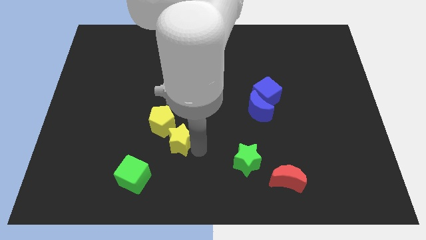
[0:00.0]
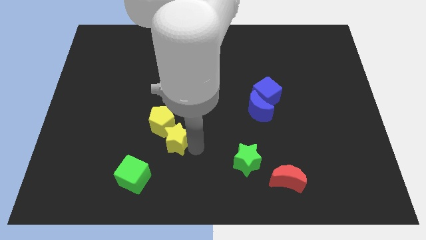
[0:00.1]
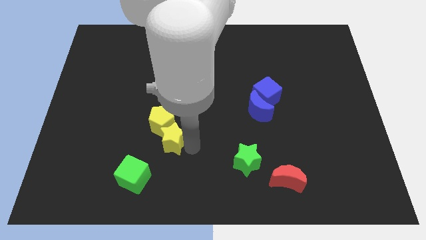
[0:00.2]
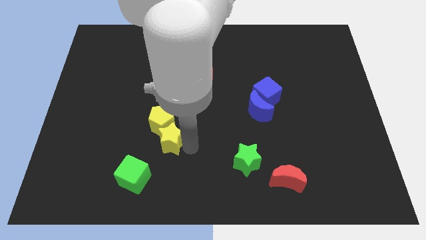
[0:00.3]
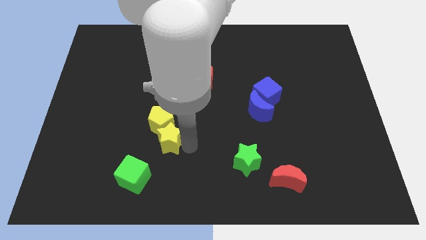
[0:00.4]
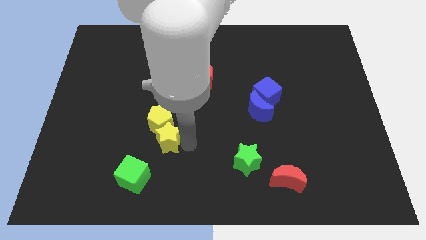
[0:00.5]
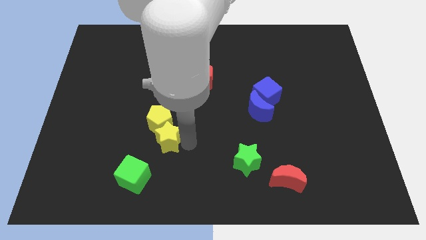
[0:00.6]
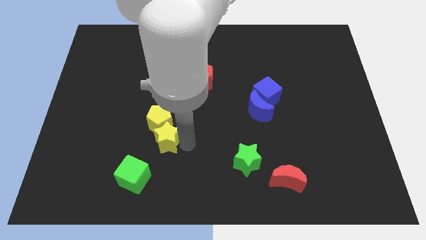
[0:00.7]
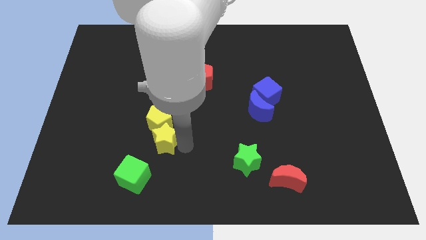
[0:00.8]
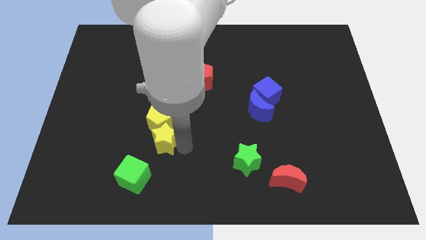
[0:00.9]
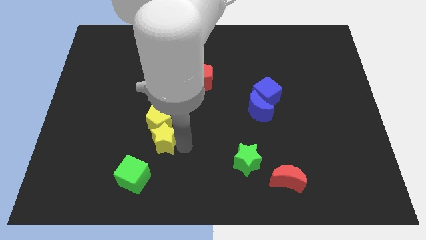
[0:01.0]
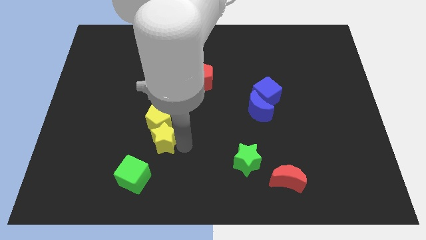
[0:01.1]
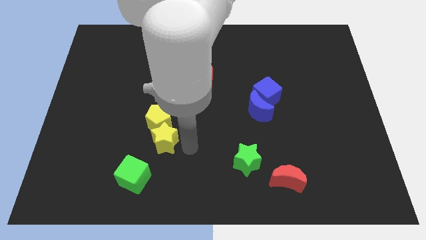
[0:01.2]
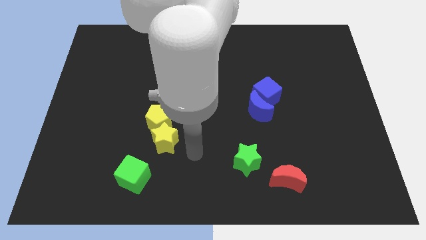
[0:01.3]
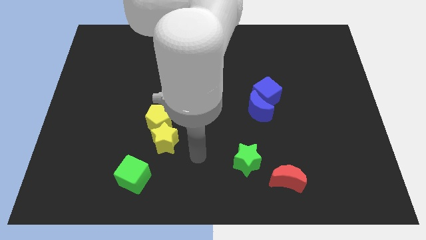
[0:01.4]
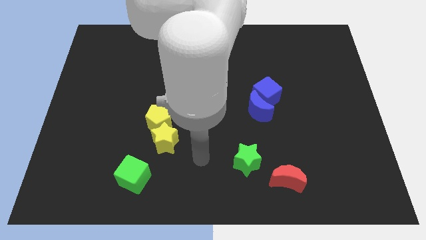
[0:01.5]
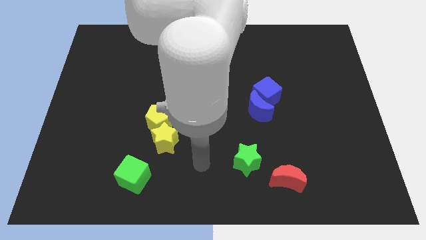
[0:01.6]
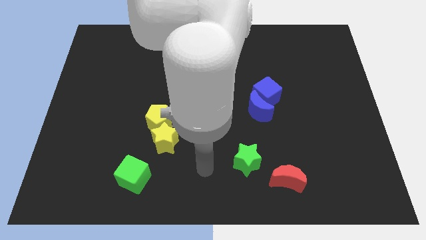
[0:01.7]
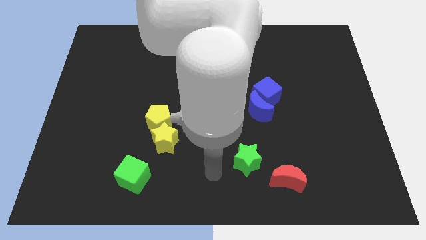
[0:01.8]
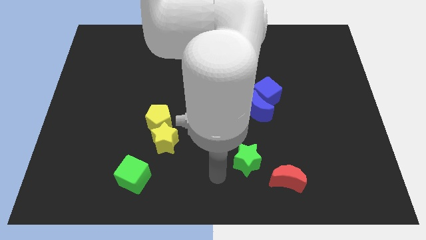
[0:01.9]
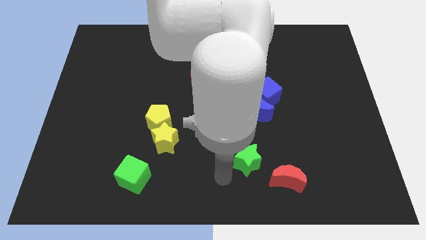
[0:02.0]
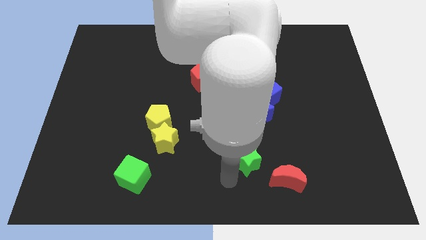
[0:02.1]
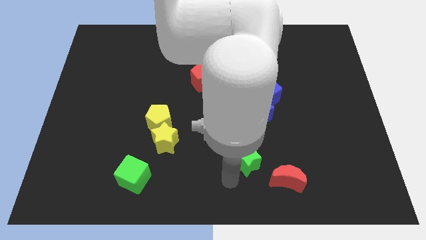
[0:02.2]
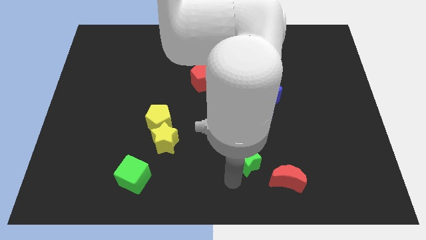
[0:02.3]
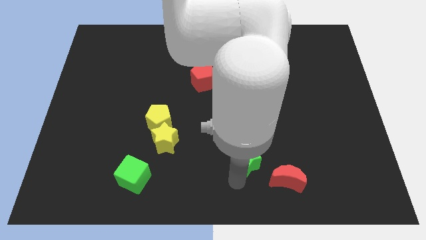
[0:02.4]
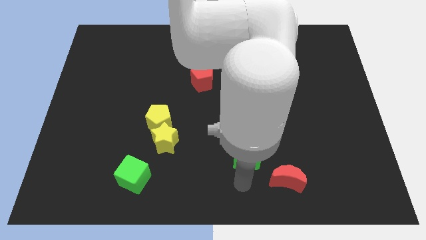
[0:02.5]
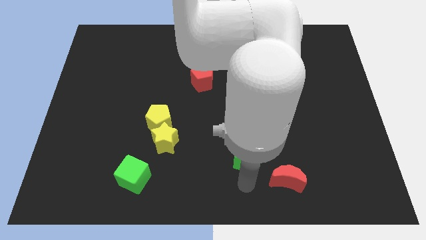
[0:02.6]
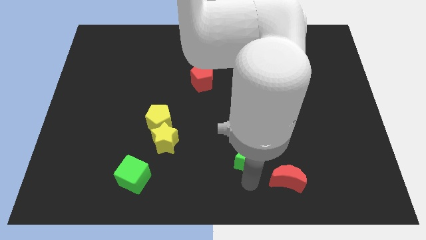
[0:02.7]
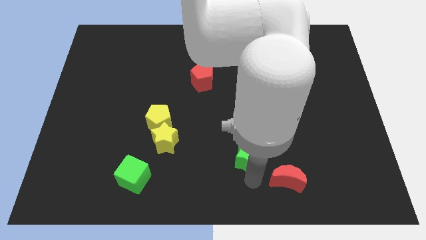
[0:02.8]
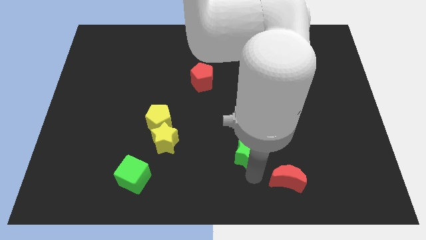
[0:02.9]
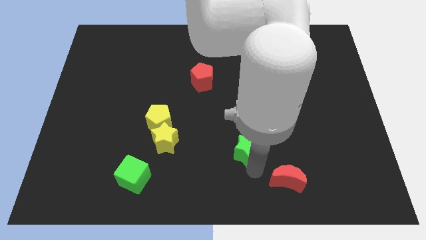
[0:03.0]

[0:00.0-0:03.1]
touch the green star

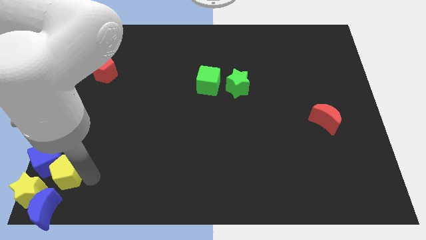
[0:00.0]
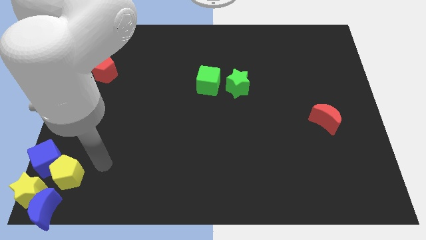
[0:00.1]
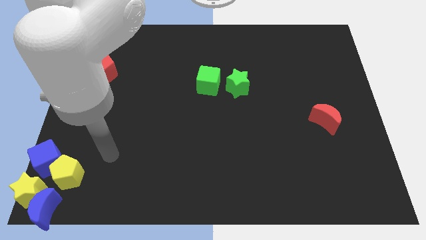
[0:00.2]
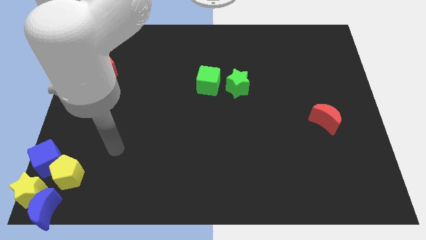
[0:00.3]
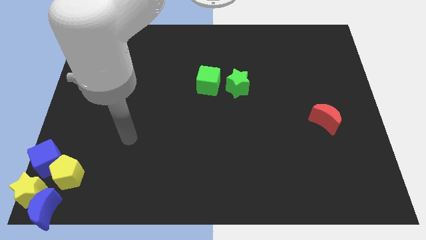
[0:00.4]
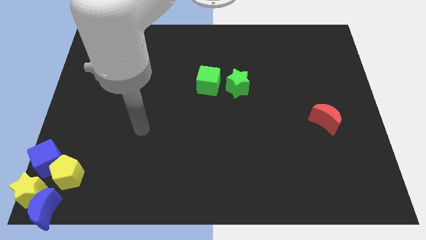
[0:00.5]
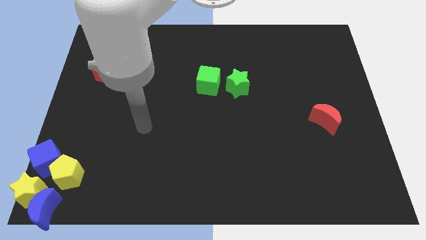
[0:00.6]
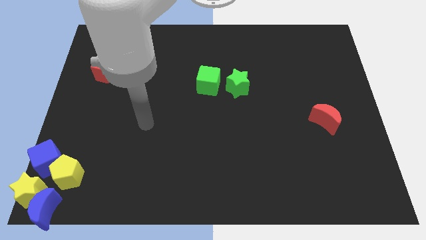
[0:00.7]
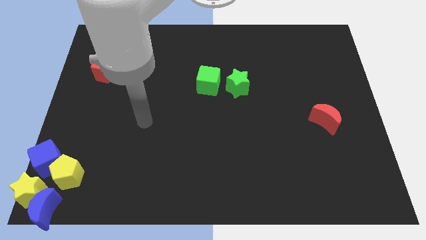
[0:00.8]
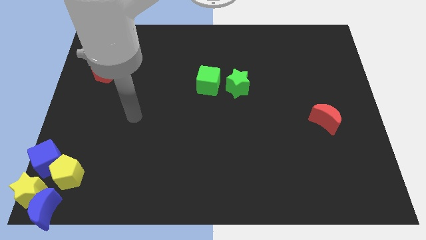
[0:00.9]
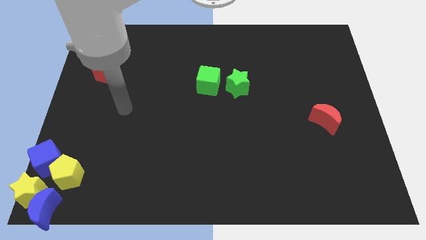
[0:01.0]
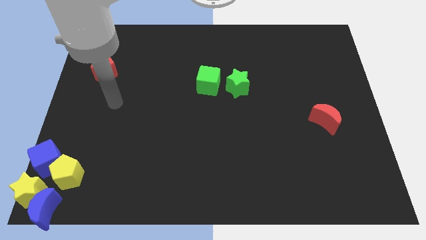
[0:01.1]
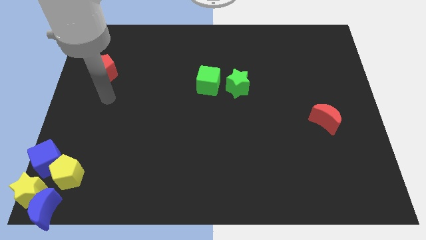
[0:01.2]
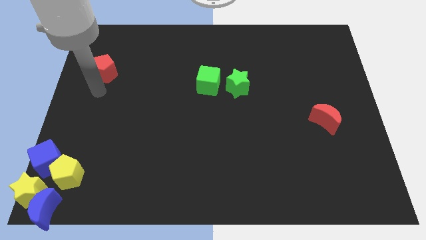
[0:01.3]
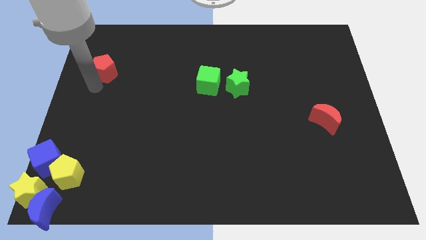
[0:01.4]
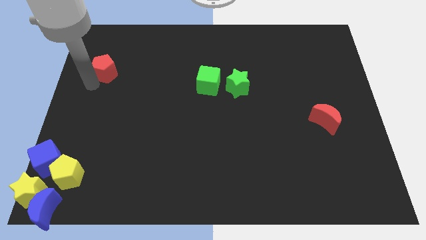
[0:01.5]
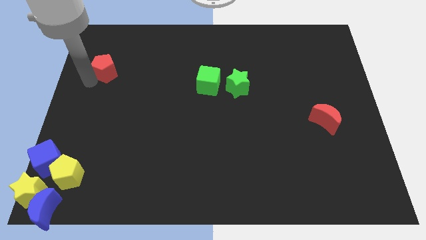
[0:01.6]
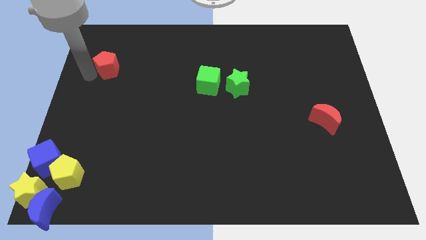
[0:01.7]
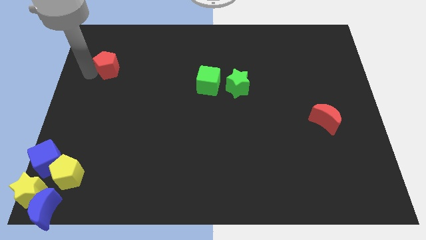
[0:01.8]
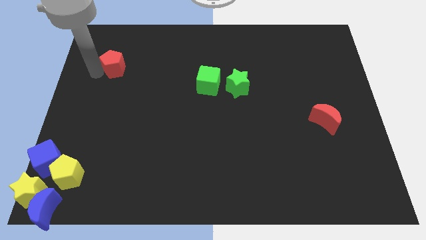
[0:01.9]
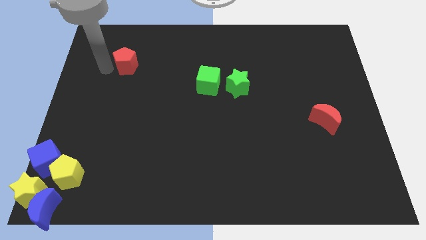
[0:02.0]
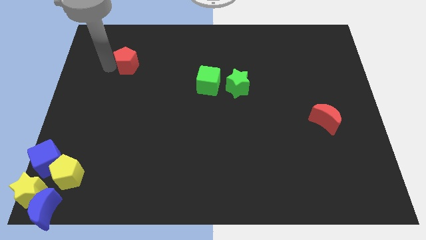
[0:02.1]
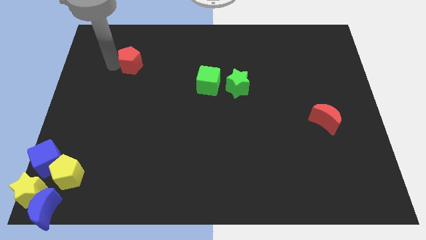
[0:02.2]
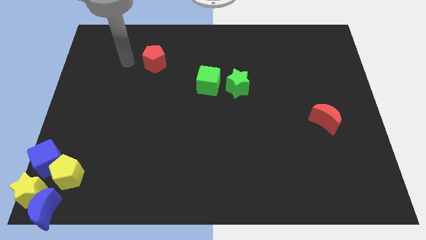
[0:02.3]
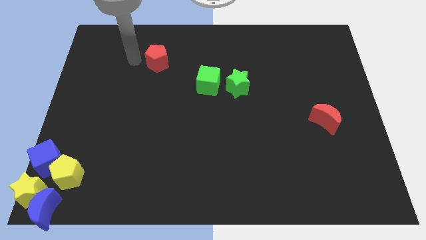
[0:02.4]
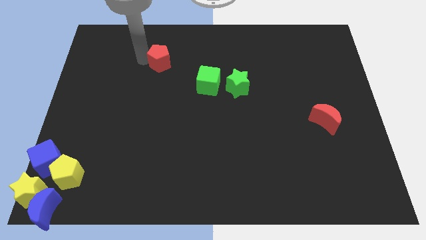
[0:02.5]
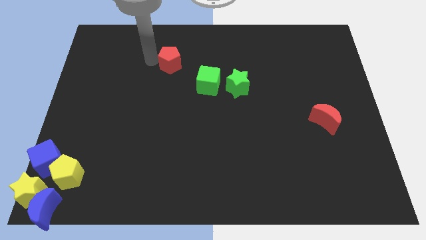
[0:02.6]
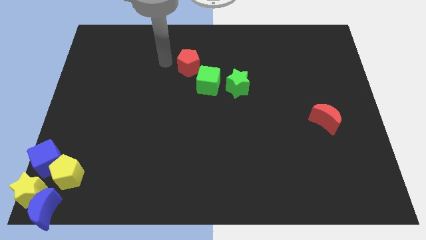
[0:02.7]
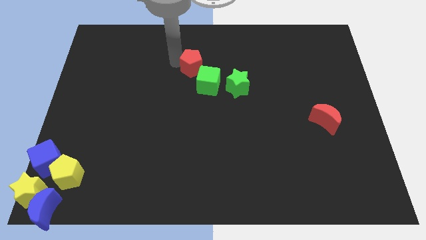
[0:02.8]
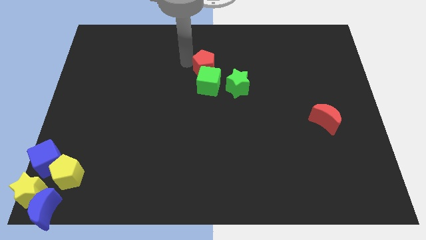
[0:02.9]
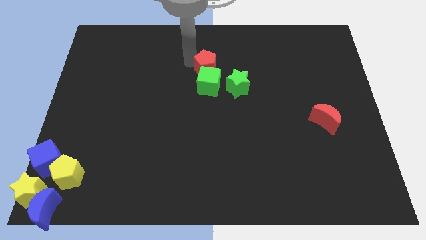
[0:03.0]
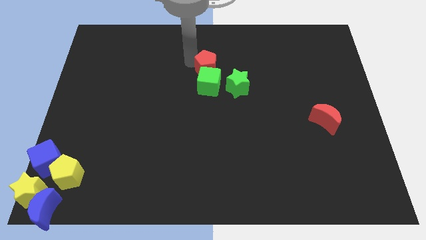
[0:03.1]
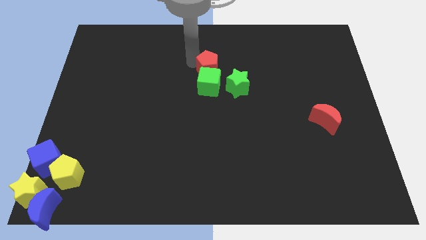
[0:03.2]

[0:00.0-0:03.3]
move the red pentagon to the top of the green cube

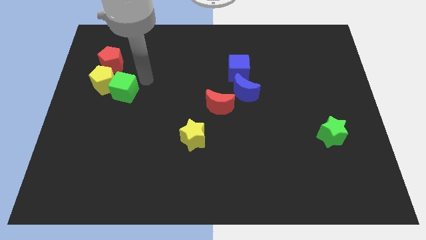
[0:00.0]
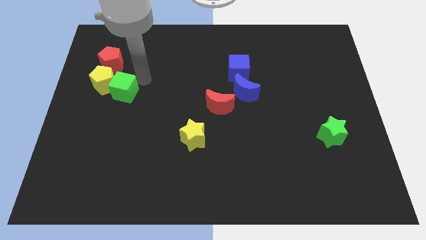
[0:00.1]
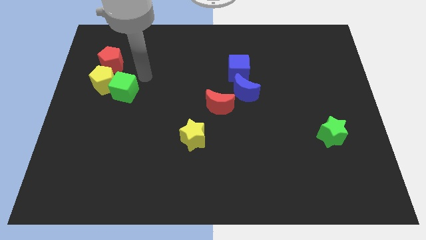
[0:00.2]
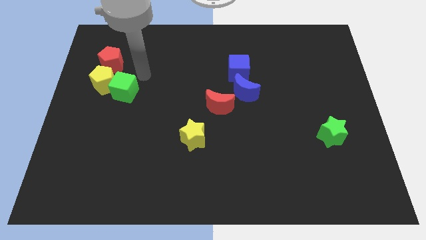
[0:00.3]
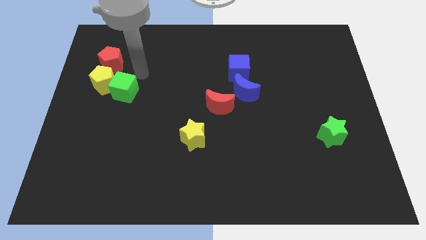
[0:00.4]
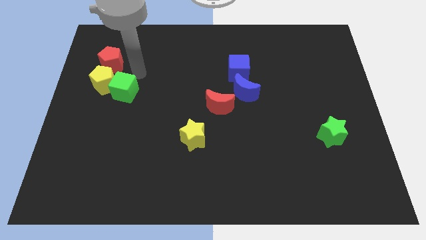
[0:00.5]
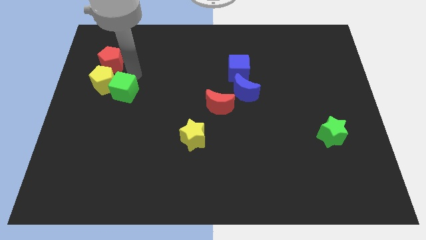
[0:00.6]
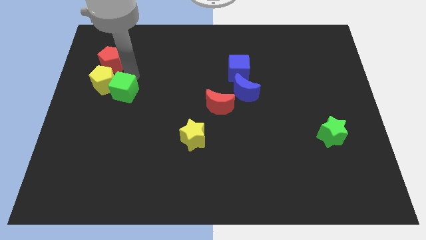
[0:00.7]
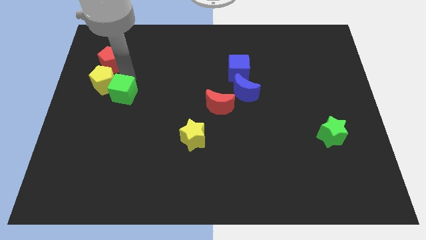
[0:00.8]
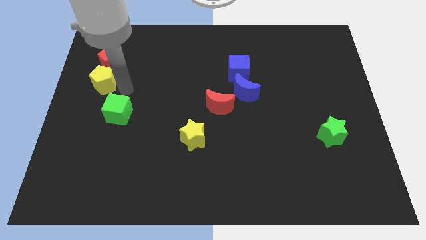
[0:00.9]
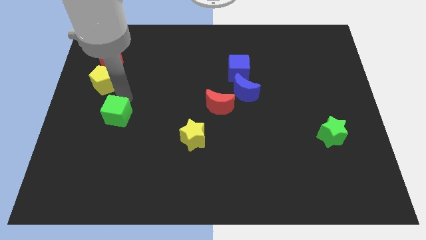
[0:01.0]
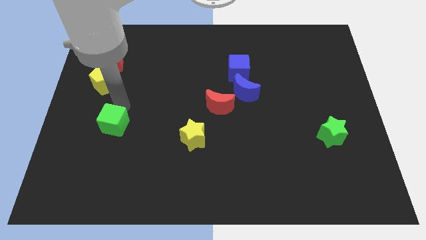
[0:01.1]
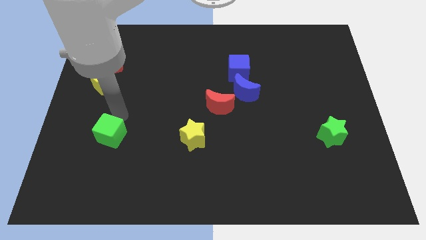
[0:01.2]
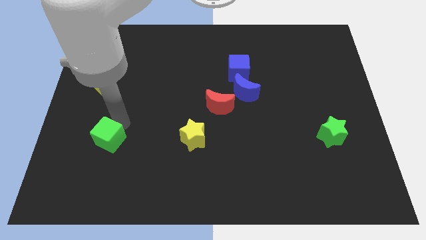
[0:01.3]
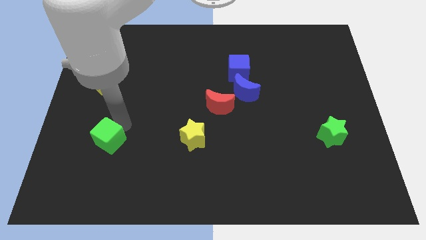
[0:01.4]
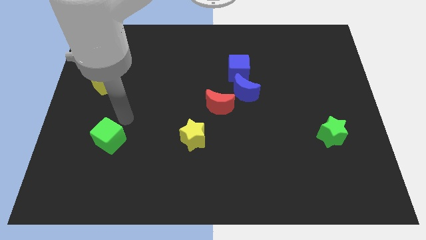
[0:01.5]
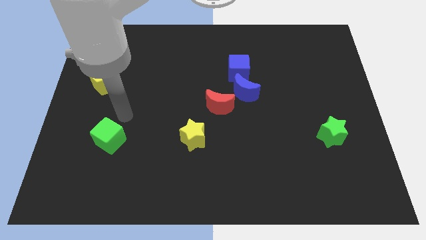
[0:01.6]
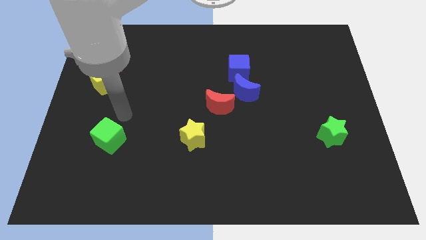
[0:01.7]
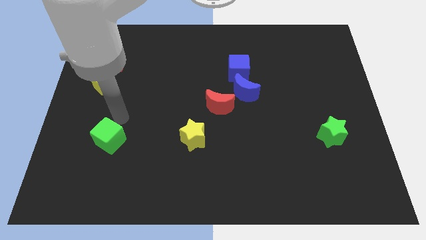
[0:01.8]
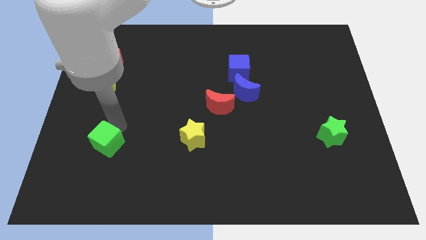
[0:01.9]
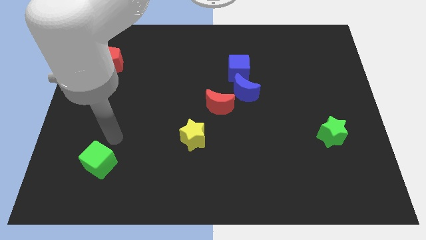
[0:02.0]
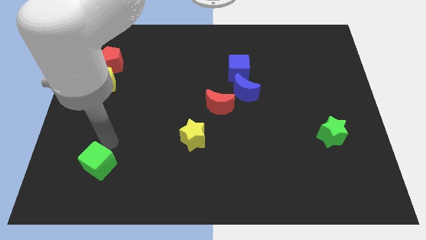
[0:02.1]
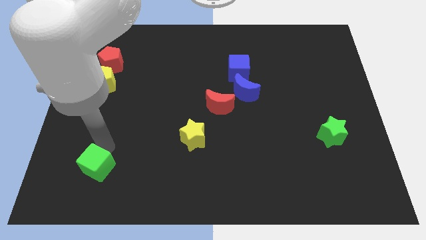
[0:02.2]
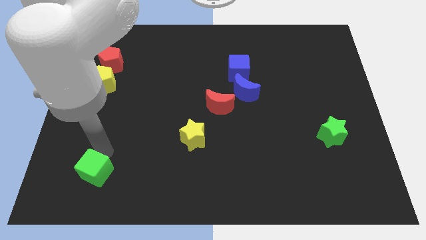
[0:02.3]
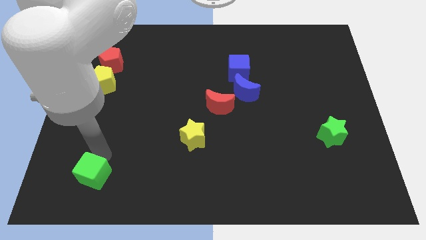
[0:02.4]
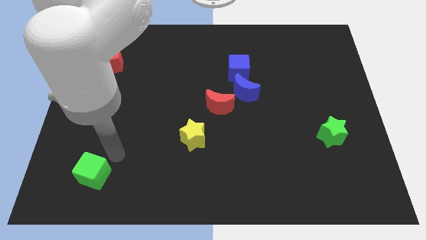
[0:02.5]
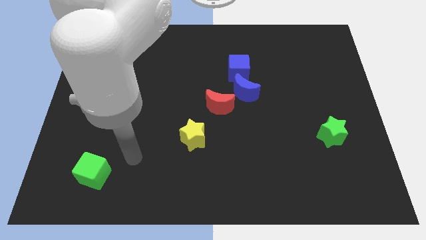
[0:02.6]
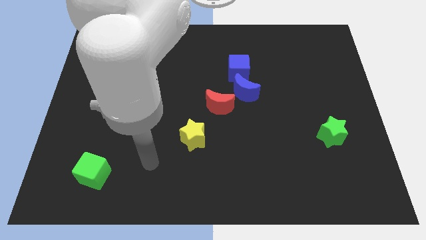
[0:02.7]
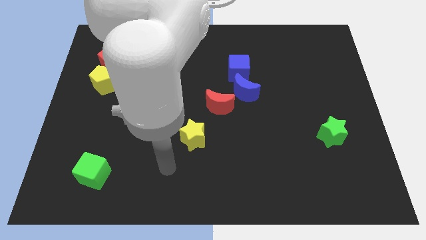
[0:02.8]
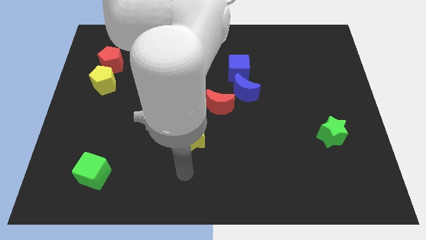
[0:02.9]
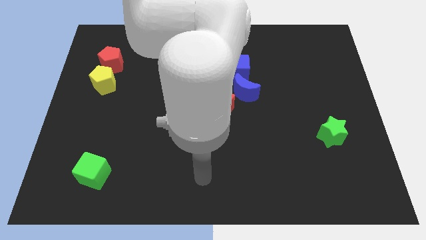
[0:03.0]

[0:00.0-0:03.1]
push green cube towards bottom left
